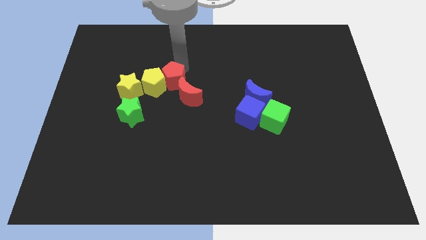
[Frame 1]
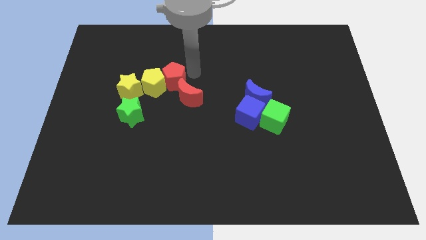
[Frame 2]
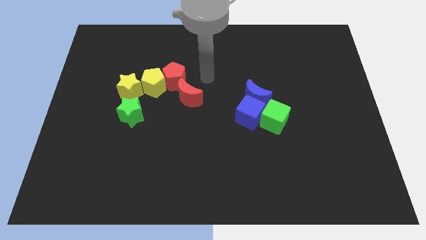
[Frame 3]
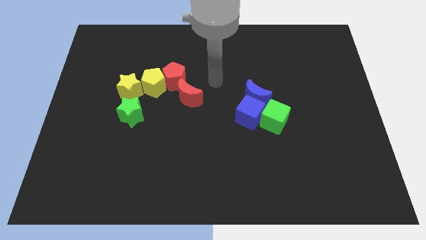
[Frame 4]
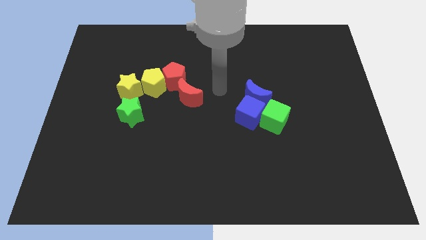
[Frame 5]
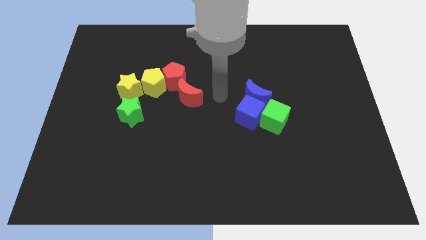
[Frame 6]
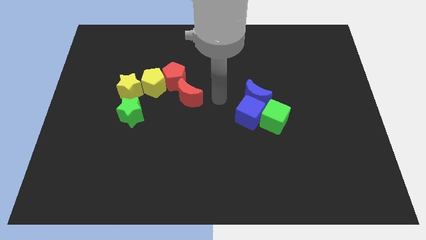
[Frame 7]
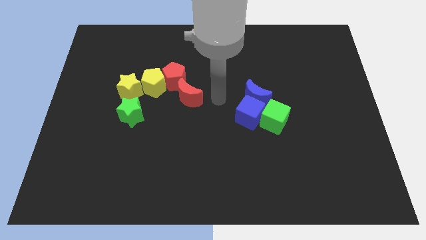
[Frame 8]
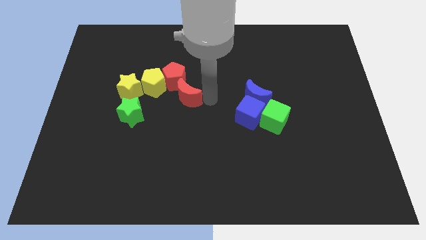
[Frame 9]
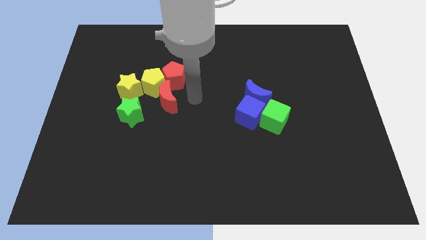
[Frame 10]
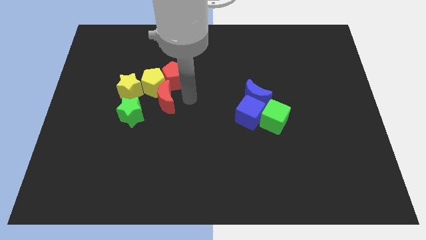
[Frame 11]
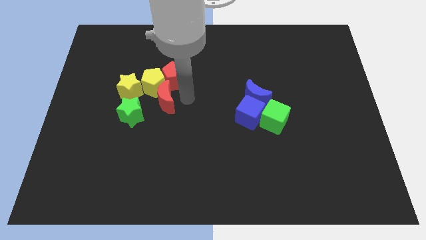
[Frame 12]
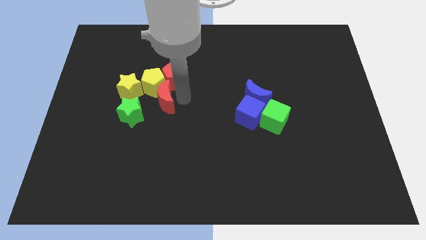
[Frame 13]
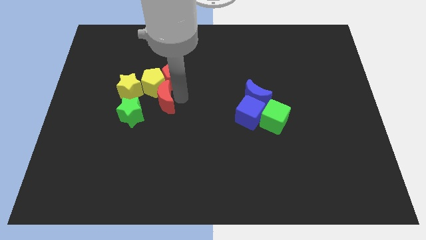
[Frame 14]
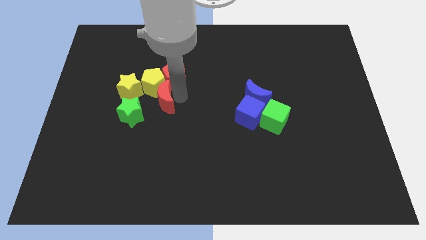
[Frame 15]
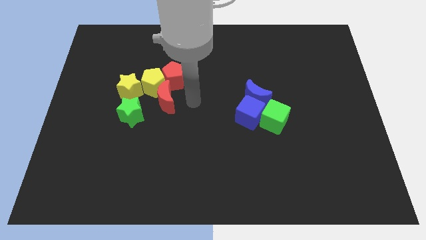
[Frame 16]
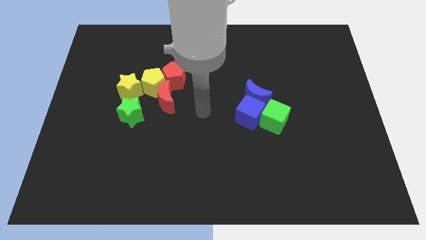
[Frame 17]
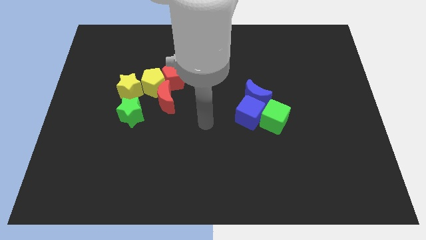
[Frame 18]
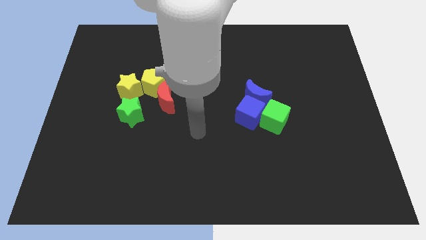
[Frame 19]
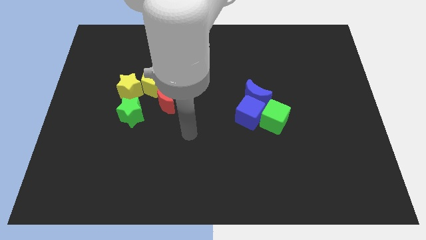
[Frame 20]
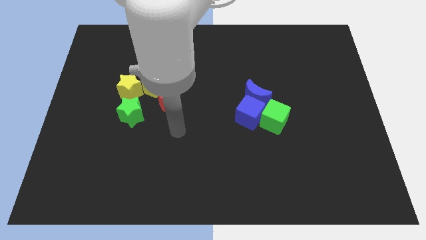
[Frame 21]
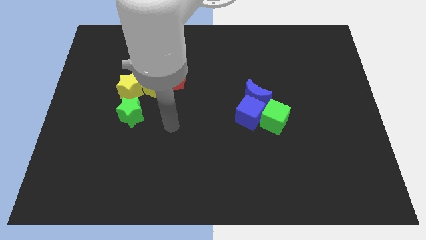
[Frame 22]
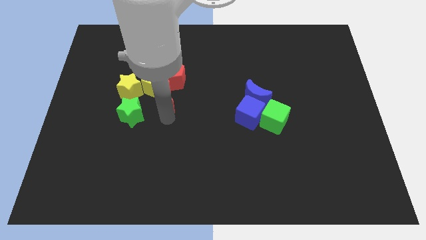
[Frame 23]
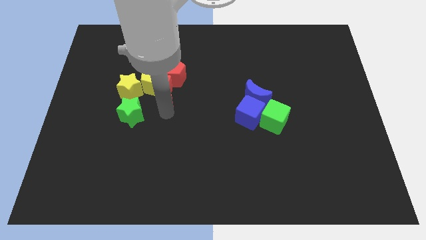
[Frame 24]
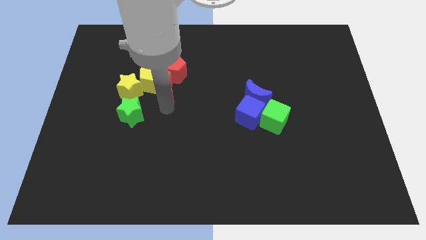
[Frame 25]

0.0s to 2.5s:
push red crescent close to yellow pentagon

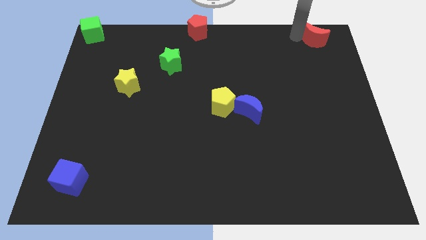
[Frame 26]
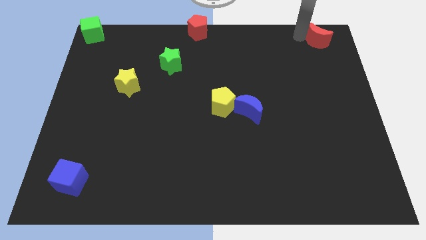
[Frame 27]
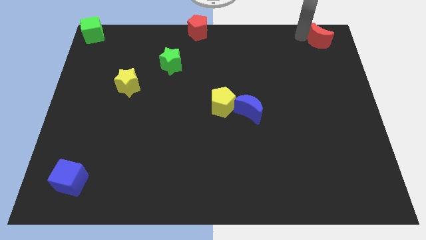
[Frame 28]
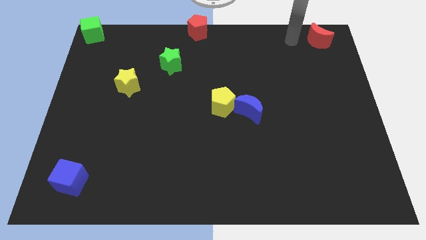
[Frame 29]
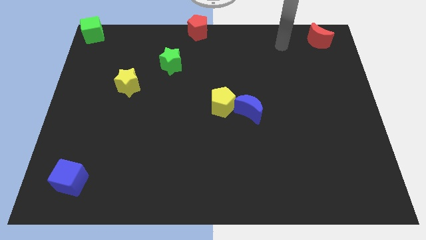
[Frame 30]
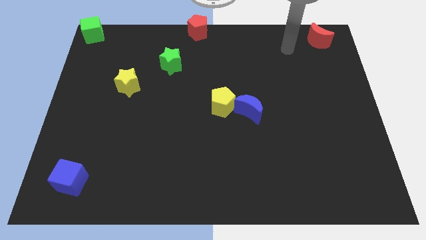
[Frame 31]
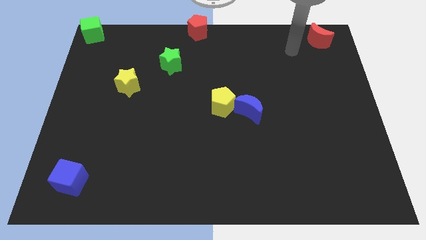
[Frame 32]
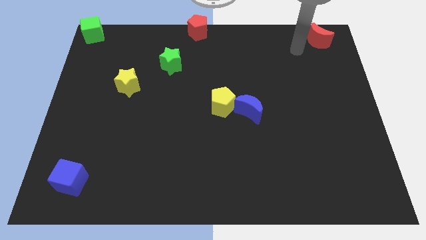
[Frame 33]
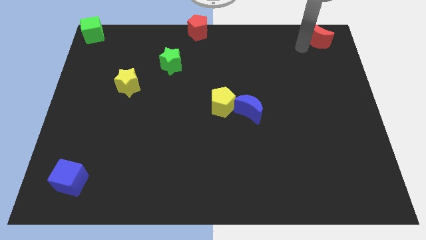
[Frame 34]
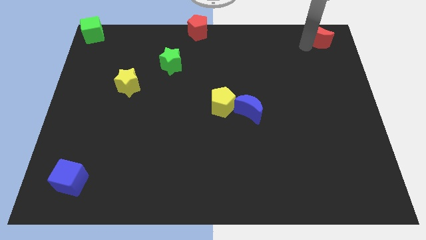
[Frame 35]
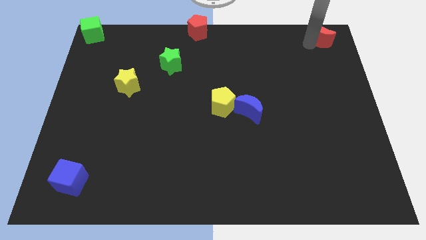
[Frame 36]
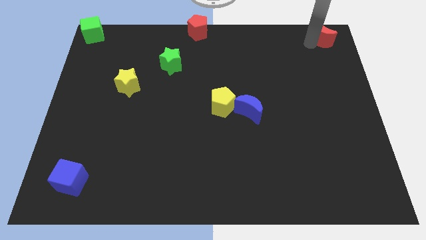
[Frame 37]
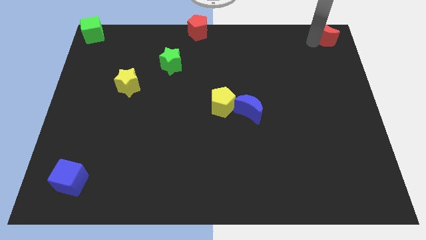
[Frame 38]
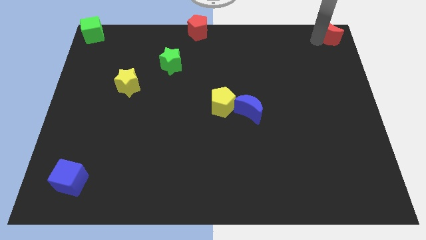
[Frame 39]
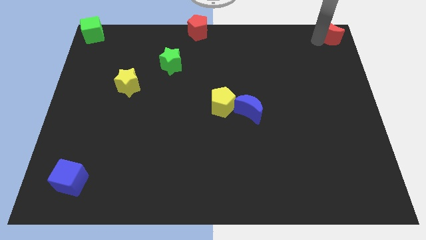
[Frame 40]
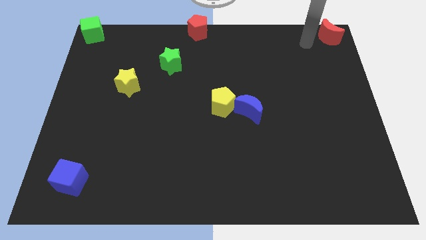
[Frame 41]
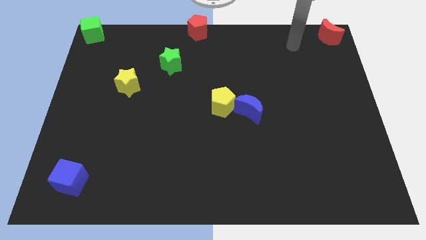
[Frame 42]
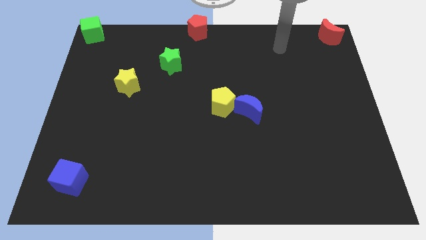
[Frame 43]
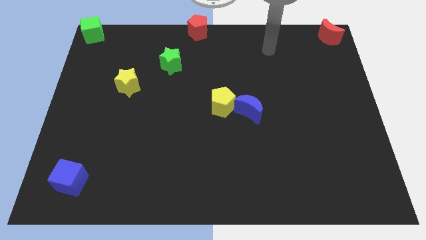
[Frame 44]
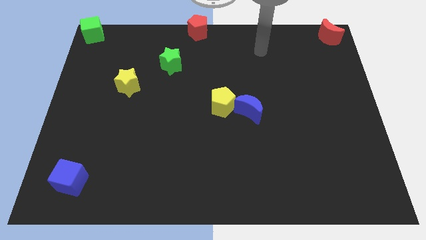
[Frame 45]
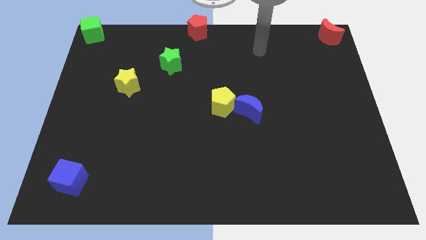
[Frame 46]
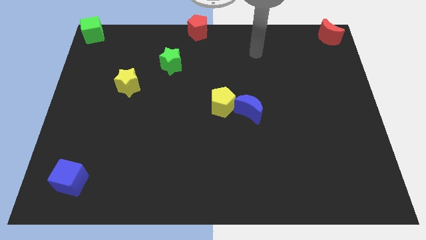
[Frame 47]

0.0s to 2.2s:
push the red crescent to the top right of the board

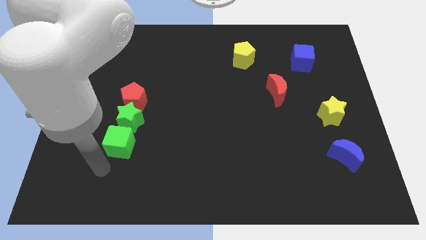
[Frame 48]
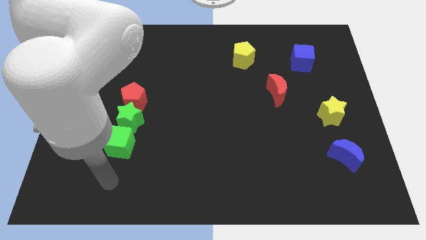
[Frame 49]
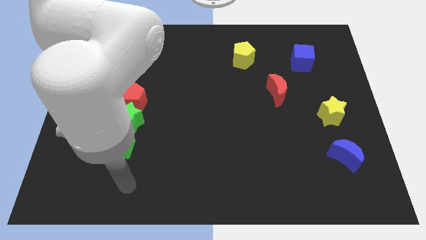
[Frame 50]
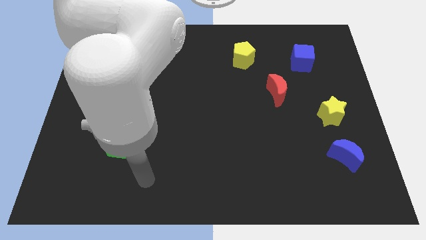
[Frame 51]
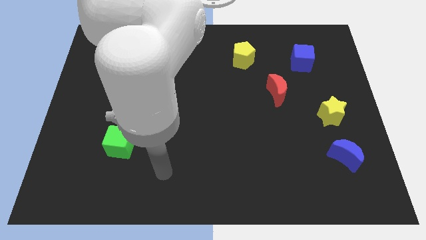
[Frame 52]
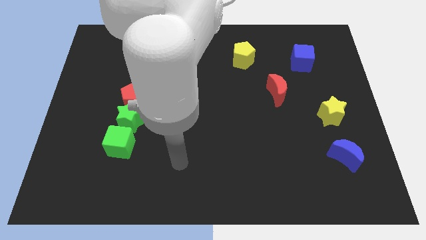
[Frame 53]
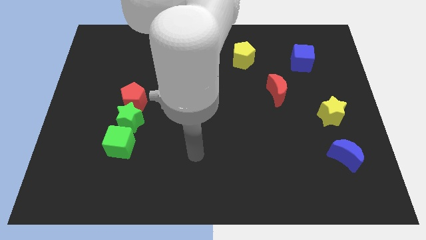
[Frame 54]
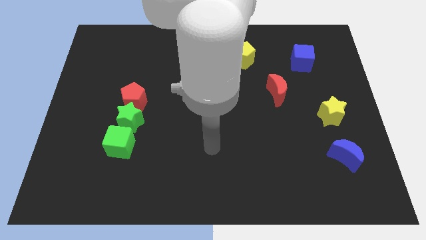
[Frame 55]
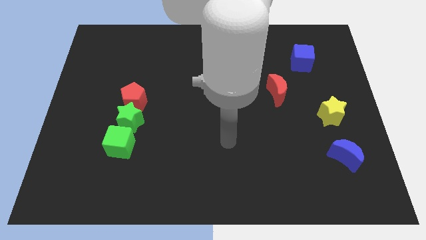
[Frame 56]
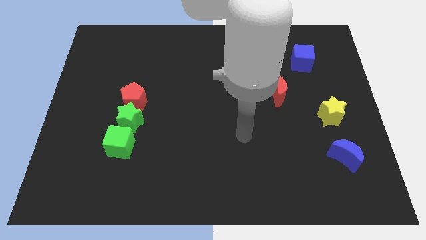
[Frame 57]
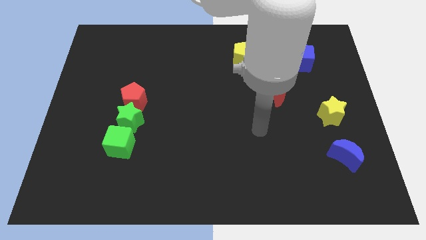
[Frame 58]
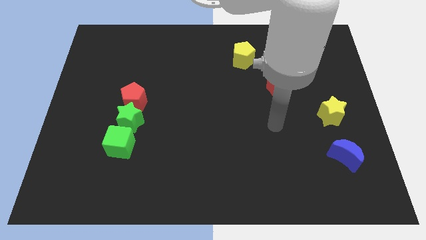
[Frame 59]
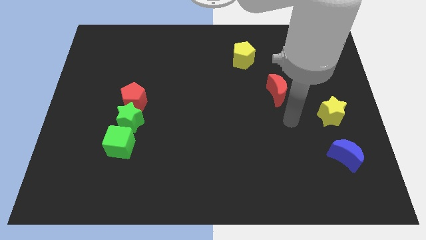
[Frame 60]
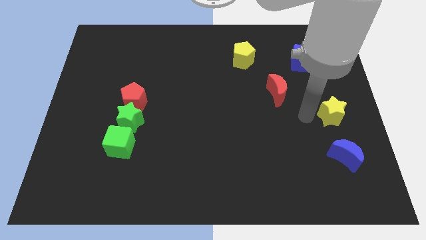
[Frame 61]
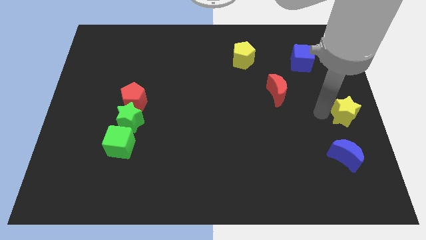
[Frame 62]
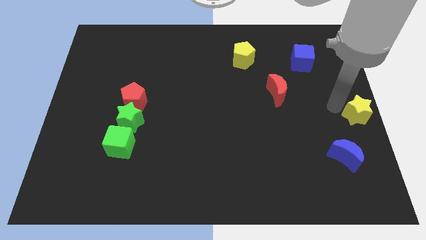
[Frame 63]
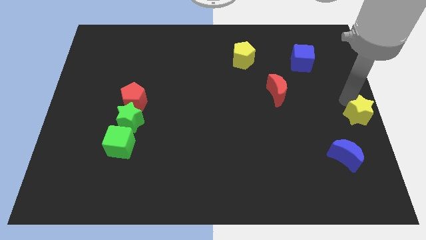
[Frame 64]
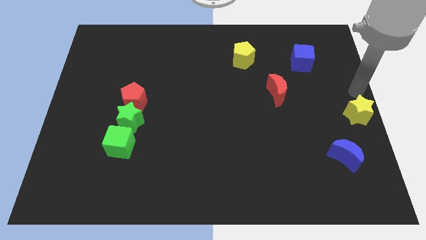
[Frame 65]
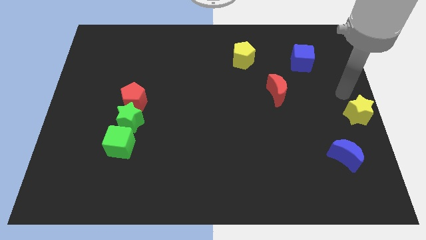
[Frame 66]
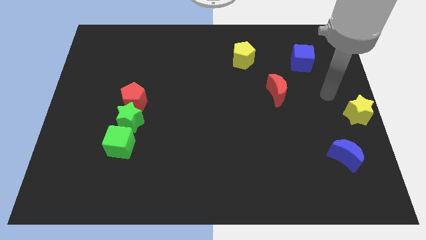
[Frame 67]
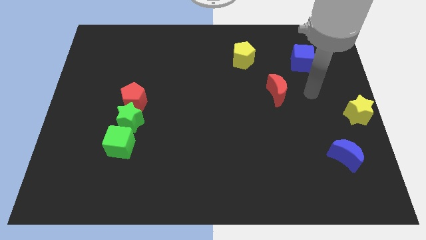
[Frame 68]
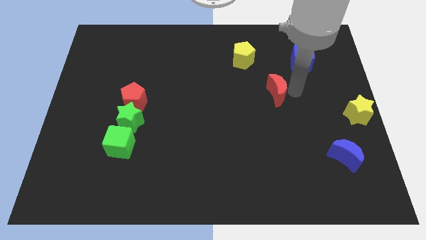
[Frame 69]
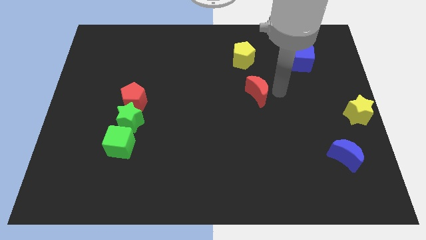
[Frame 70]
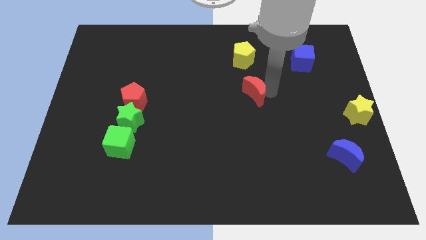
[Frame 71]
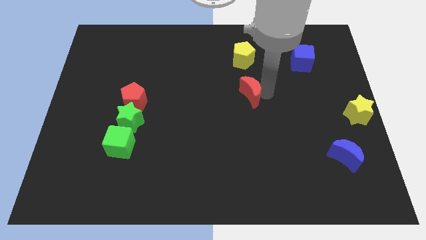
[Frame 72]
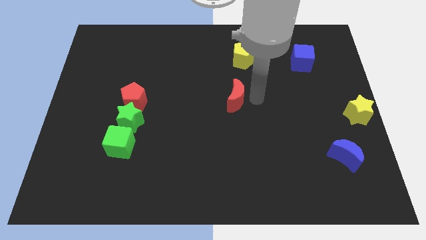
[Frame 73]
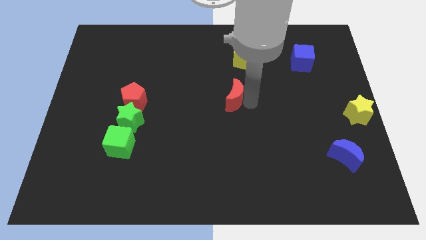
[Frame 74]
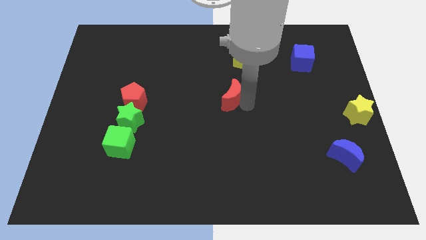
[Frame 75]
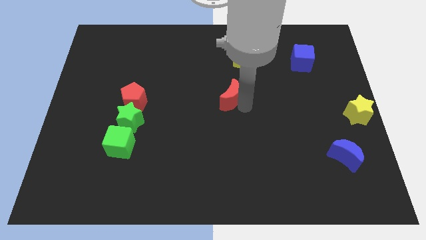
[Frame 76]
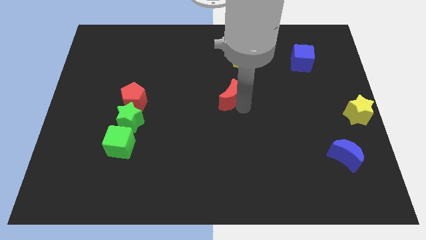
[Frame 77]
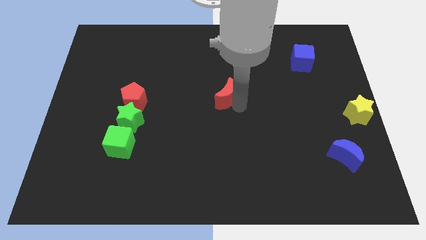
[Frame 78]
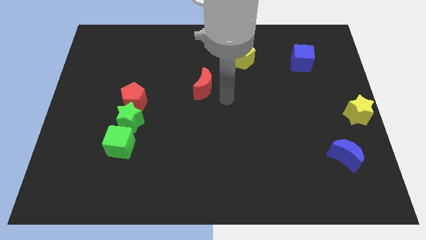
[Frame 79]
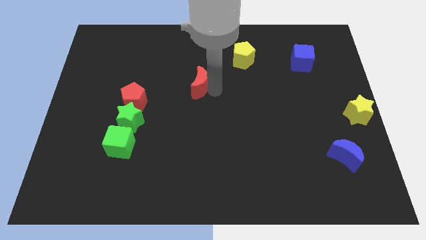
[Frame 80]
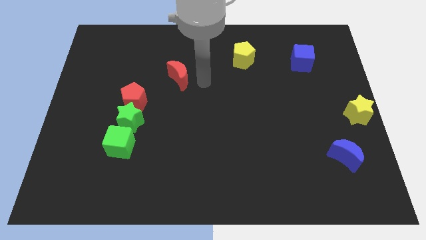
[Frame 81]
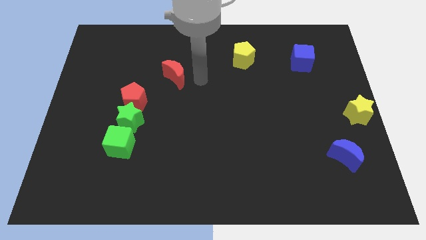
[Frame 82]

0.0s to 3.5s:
move the red crescent diagonally to the top right side of the red pentagon

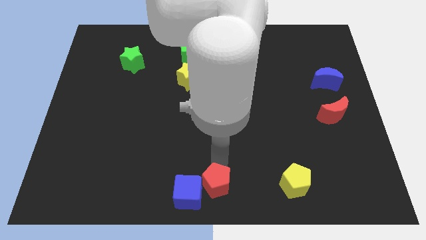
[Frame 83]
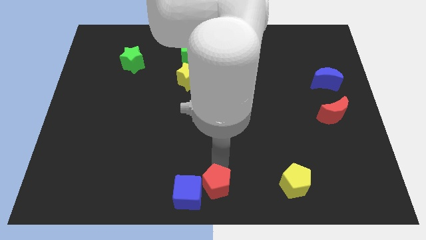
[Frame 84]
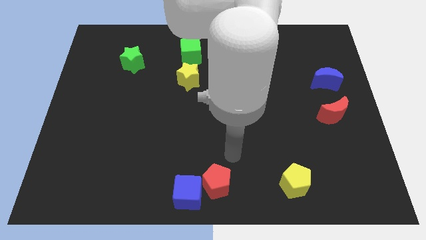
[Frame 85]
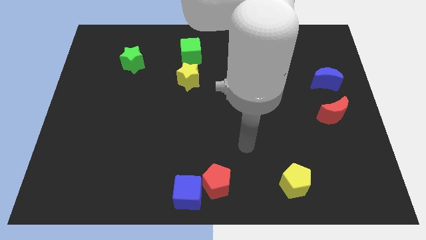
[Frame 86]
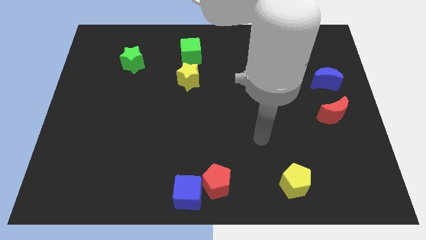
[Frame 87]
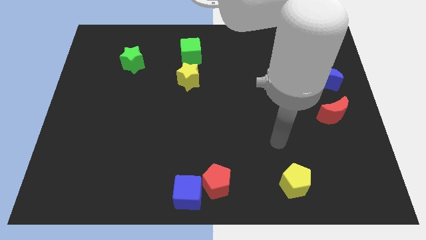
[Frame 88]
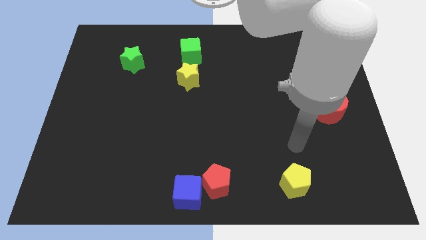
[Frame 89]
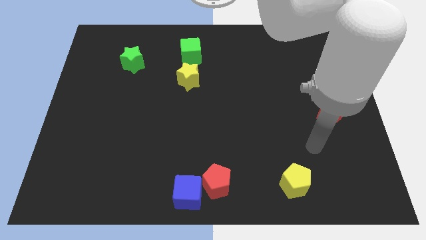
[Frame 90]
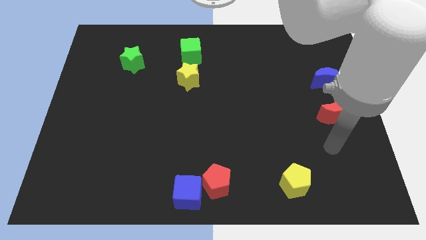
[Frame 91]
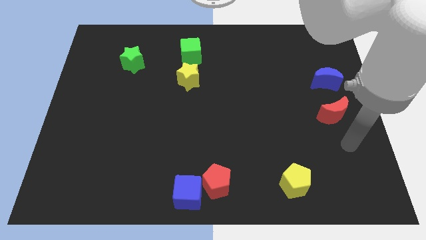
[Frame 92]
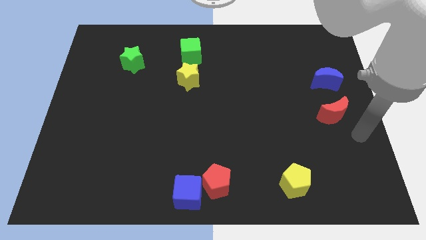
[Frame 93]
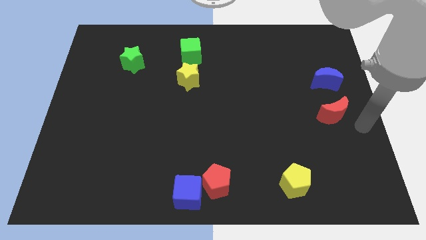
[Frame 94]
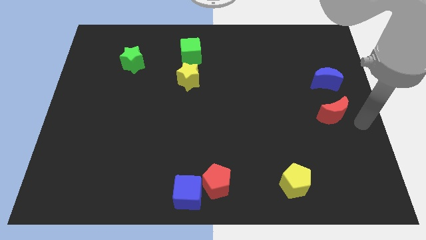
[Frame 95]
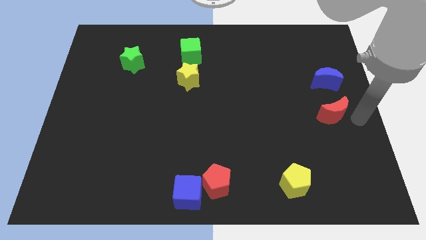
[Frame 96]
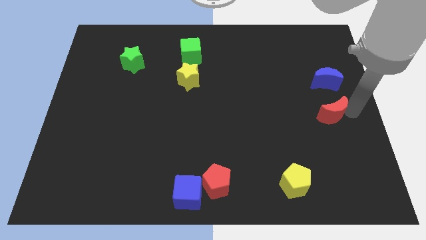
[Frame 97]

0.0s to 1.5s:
point your arm at the right of the red crescent
